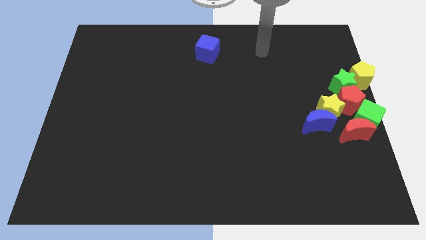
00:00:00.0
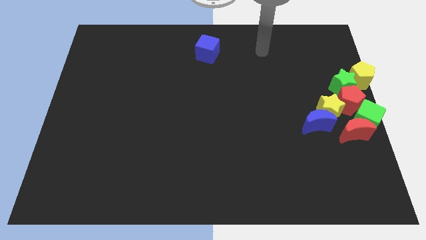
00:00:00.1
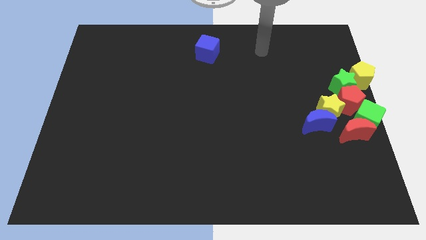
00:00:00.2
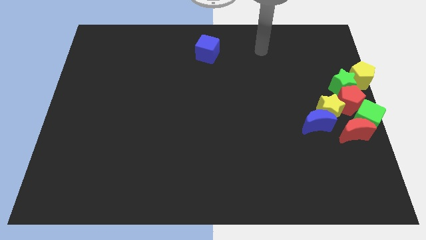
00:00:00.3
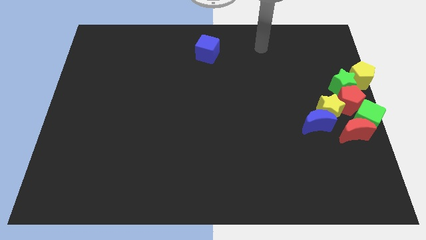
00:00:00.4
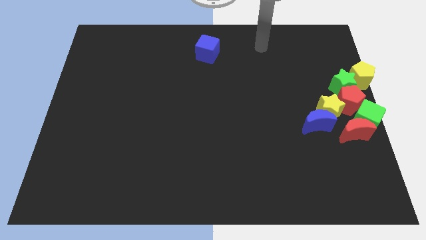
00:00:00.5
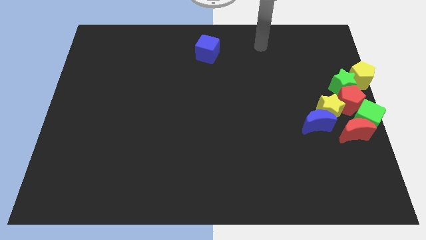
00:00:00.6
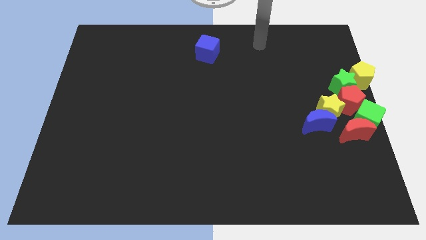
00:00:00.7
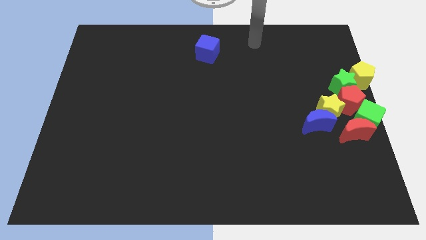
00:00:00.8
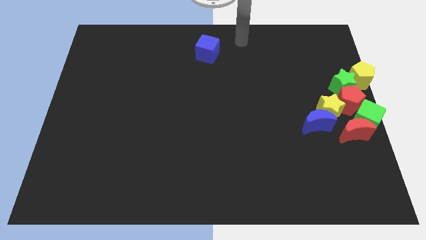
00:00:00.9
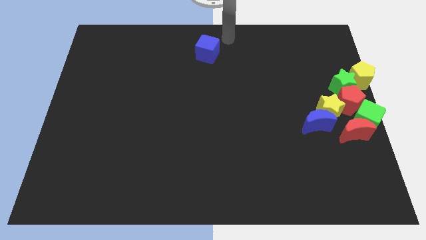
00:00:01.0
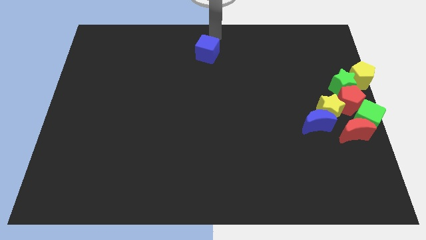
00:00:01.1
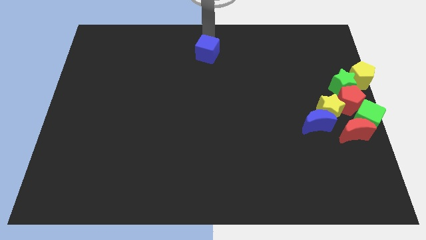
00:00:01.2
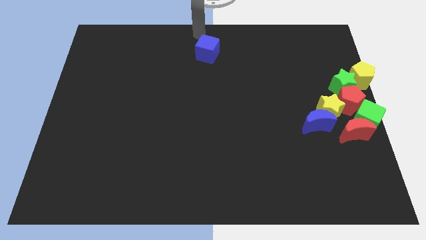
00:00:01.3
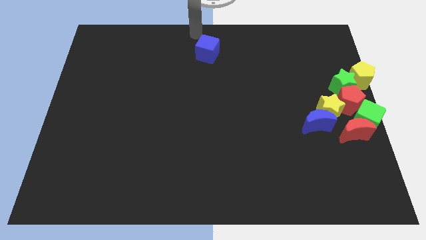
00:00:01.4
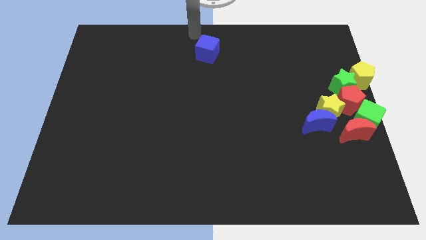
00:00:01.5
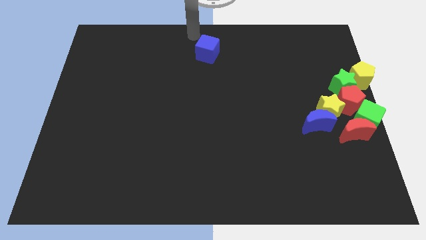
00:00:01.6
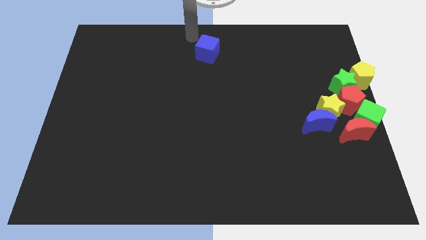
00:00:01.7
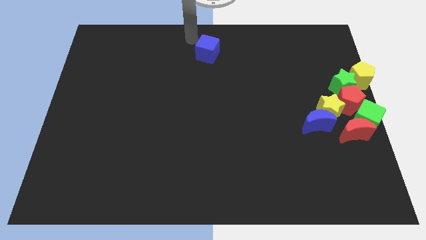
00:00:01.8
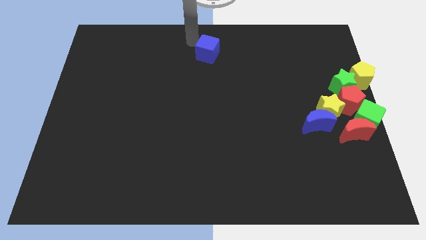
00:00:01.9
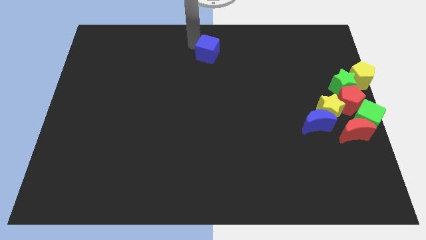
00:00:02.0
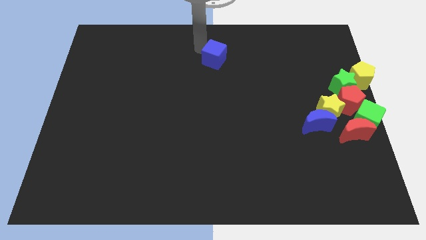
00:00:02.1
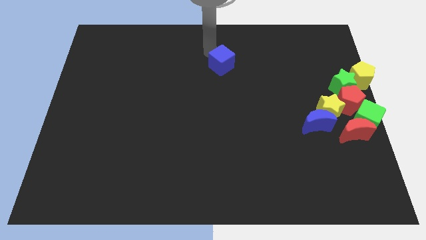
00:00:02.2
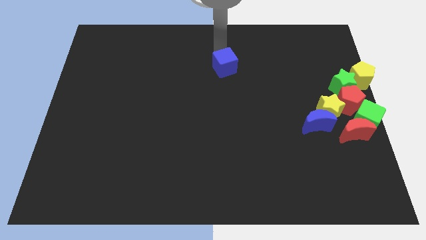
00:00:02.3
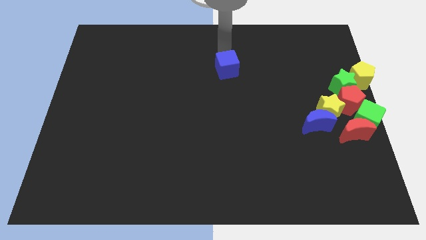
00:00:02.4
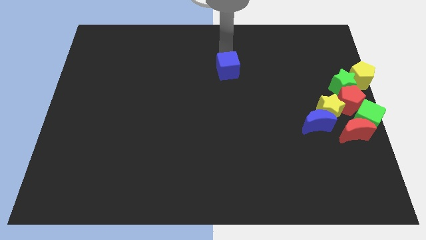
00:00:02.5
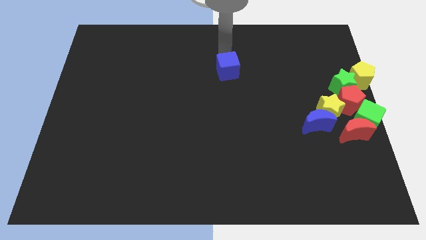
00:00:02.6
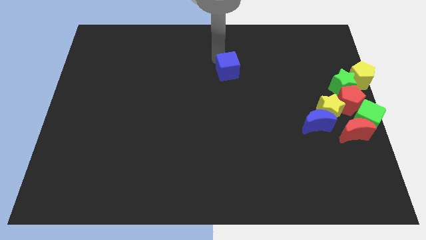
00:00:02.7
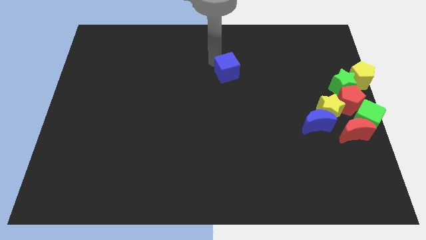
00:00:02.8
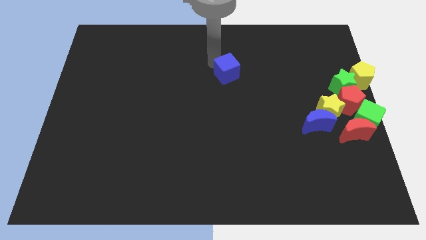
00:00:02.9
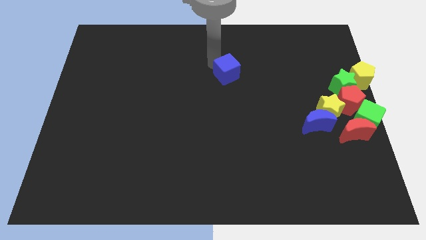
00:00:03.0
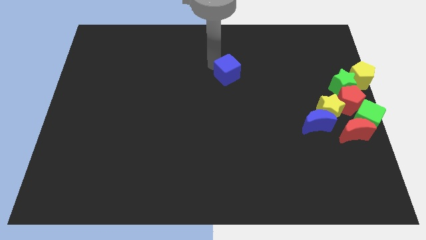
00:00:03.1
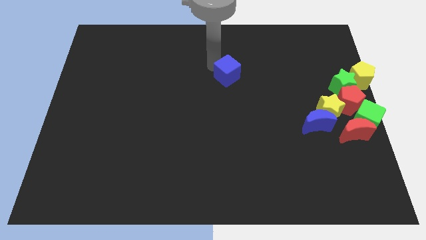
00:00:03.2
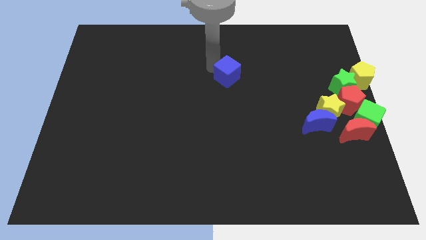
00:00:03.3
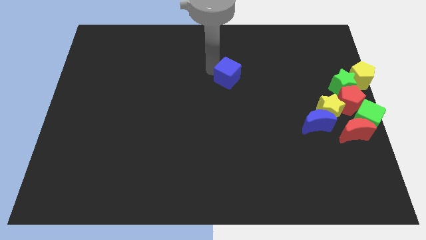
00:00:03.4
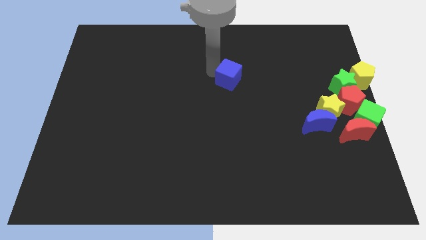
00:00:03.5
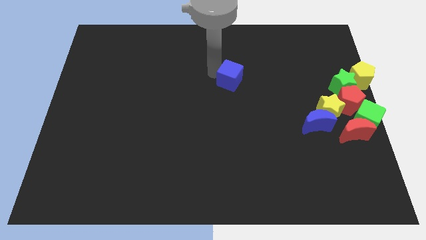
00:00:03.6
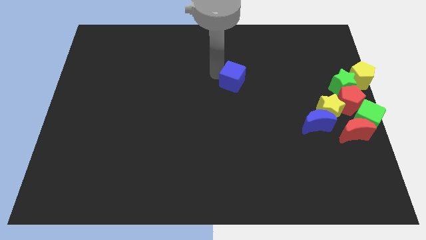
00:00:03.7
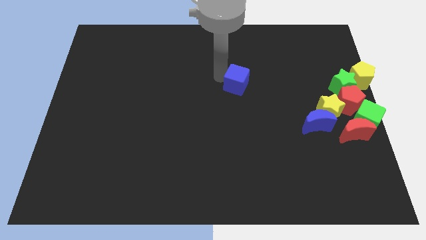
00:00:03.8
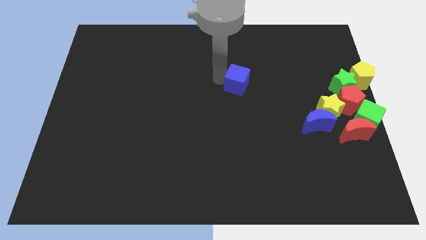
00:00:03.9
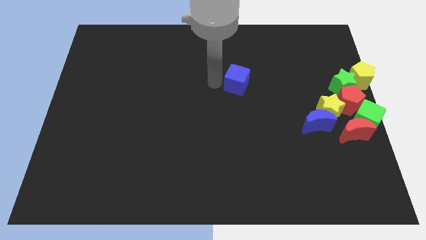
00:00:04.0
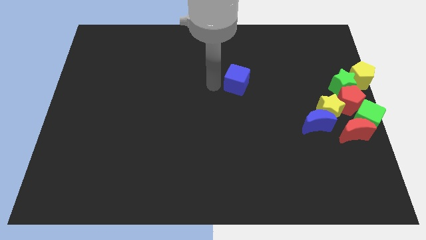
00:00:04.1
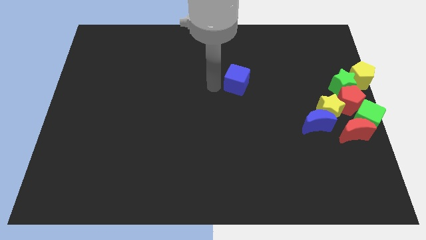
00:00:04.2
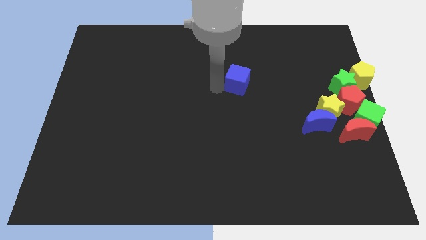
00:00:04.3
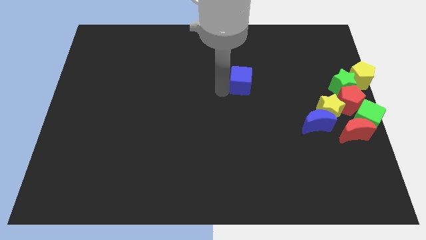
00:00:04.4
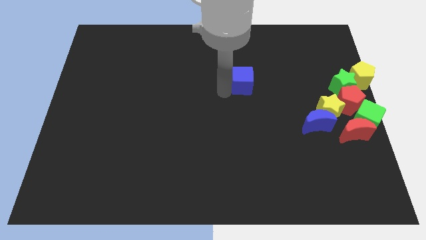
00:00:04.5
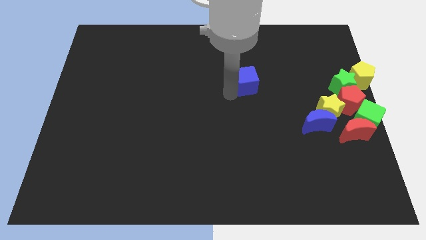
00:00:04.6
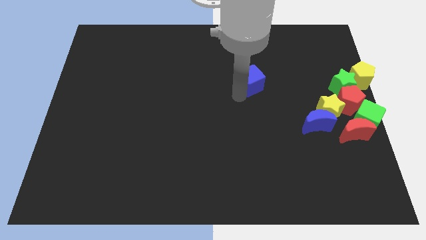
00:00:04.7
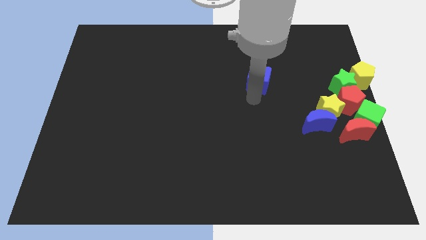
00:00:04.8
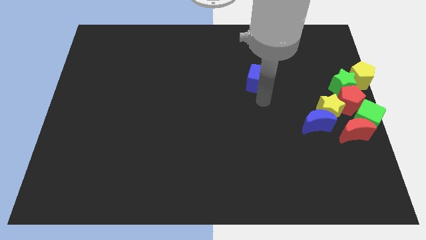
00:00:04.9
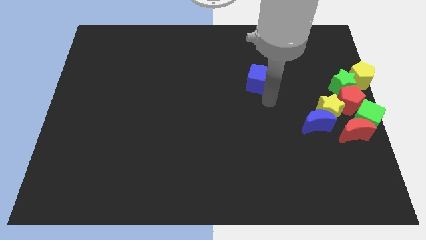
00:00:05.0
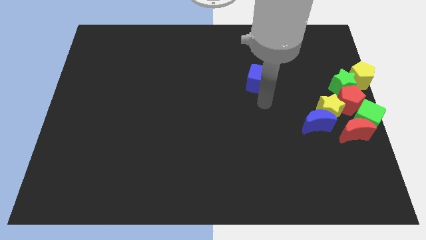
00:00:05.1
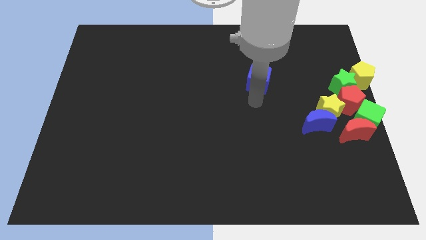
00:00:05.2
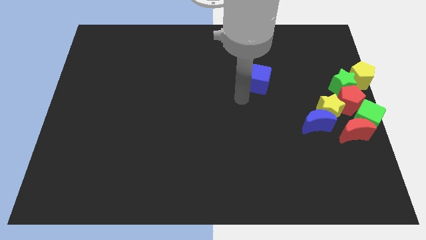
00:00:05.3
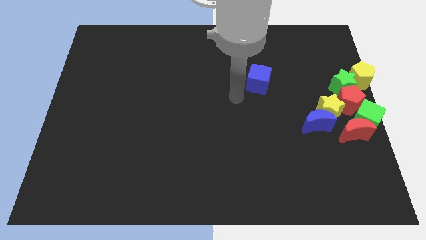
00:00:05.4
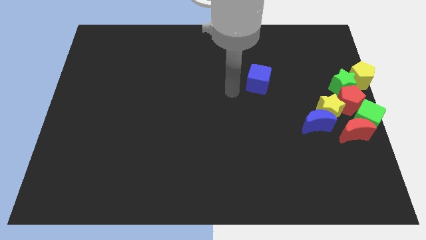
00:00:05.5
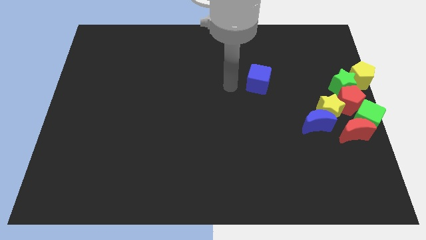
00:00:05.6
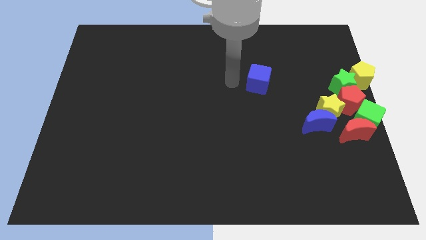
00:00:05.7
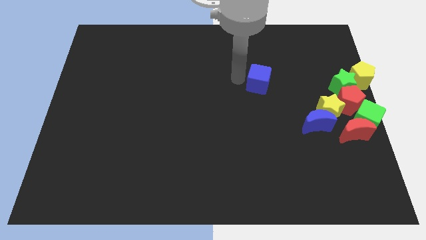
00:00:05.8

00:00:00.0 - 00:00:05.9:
move the blue cube towards the right side of the board

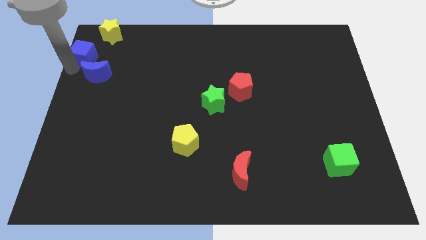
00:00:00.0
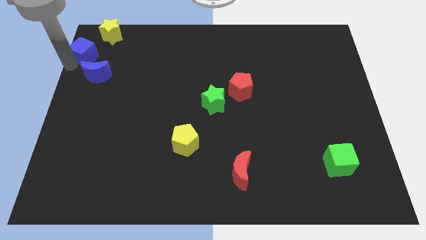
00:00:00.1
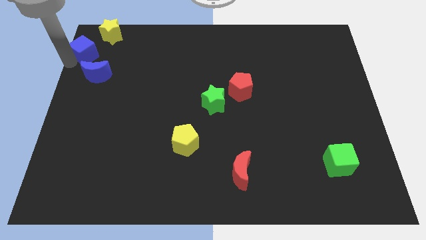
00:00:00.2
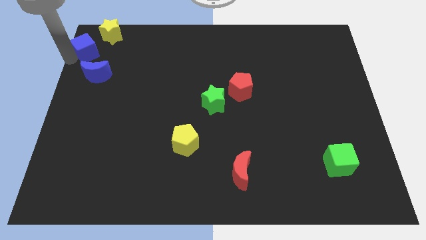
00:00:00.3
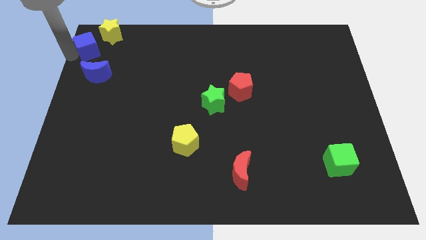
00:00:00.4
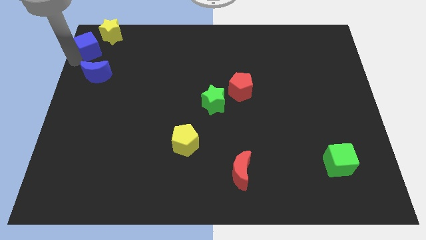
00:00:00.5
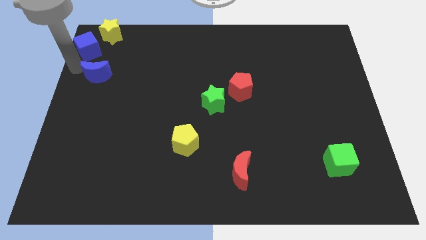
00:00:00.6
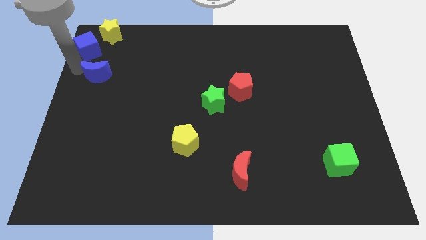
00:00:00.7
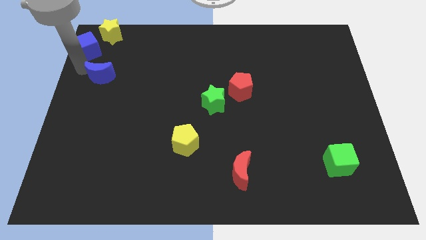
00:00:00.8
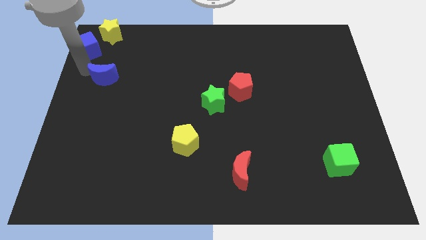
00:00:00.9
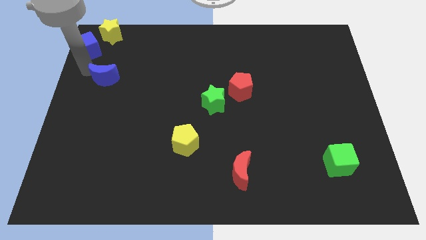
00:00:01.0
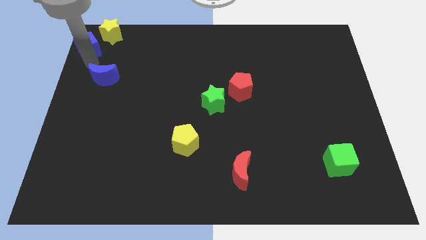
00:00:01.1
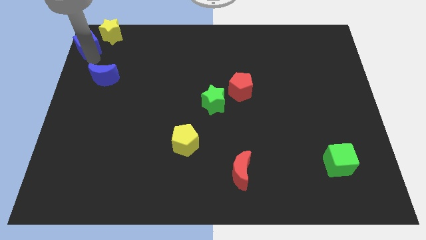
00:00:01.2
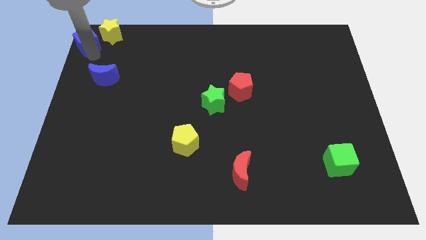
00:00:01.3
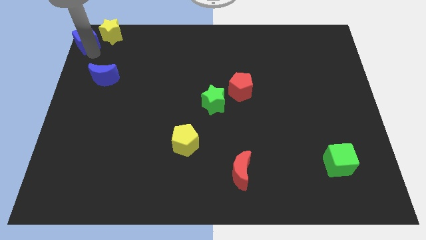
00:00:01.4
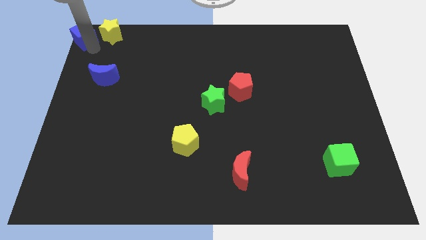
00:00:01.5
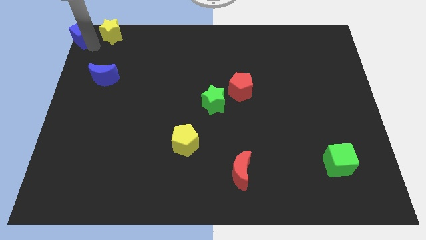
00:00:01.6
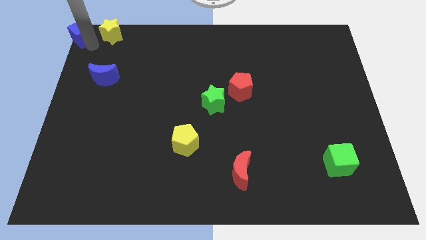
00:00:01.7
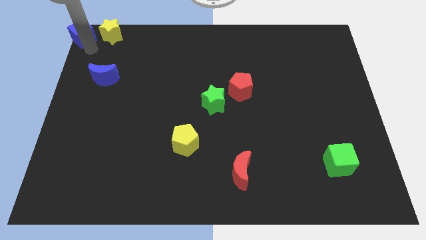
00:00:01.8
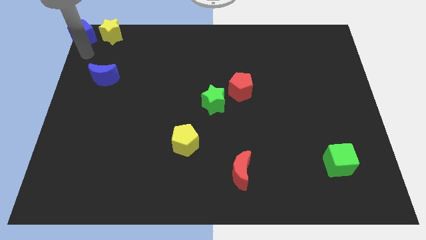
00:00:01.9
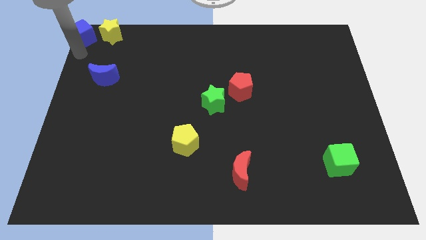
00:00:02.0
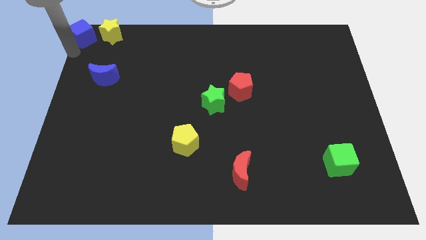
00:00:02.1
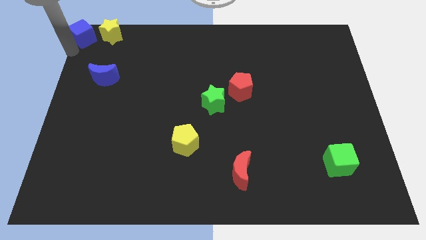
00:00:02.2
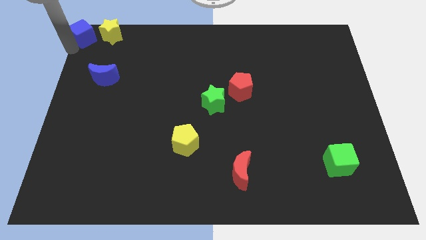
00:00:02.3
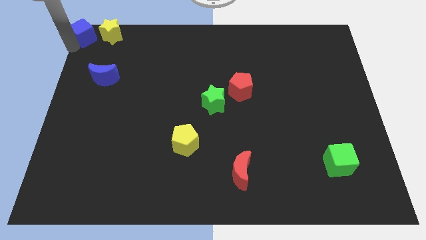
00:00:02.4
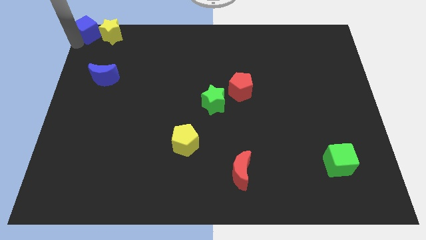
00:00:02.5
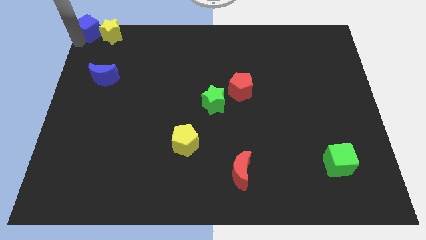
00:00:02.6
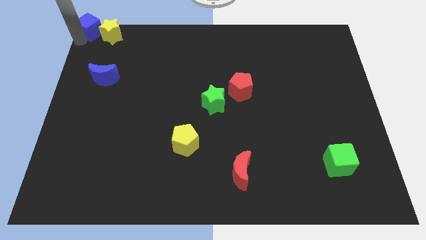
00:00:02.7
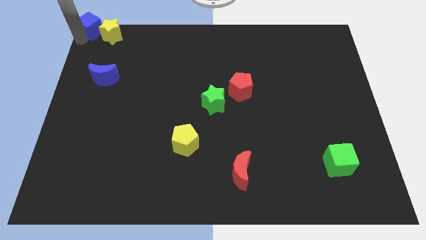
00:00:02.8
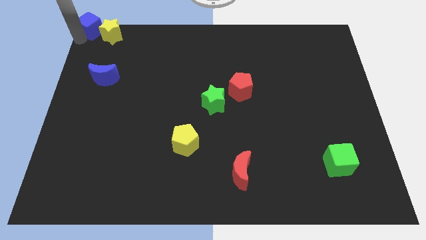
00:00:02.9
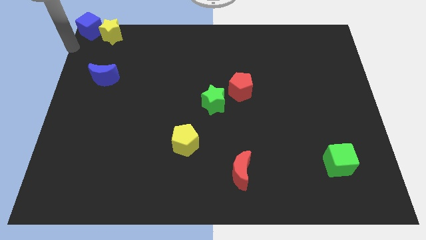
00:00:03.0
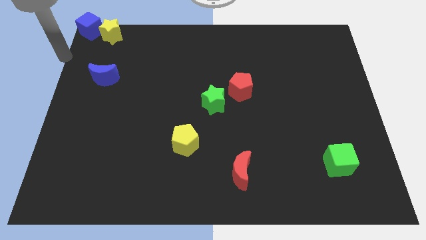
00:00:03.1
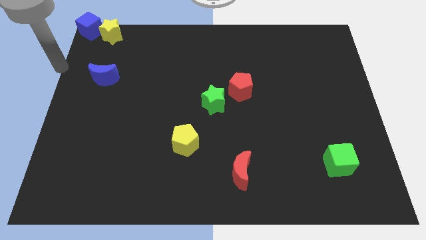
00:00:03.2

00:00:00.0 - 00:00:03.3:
place the blue cube to the left of the yellow star
